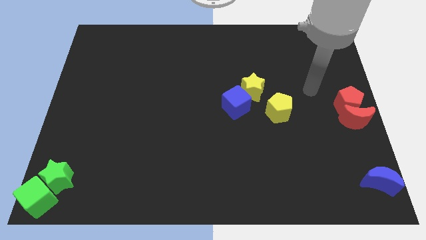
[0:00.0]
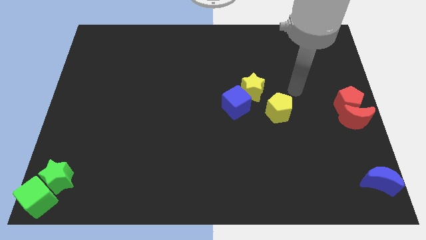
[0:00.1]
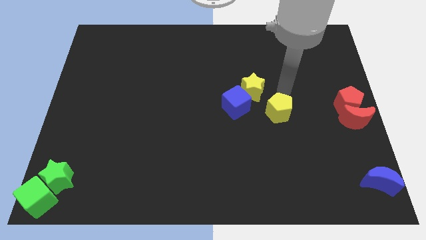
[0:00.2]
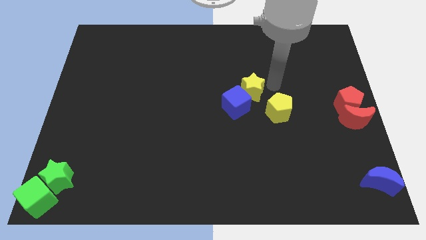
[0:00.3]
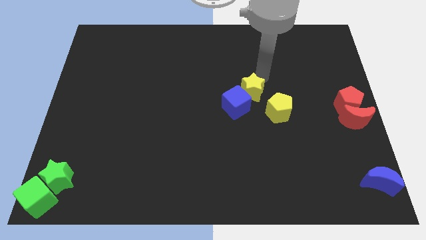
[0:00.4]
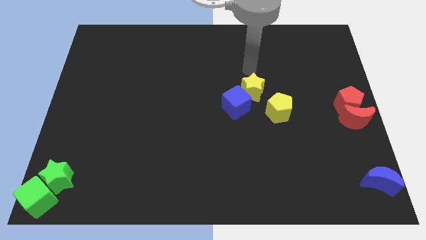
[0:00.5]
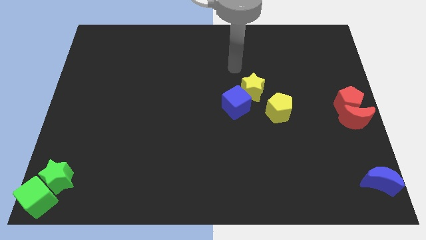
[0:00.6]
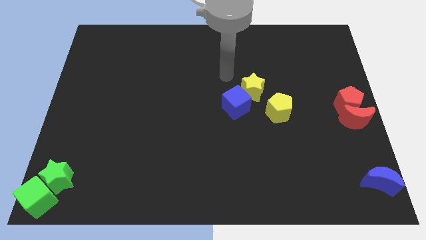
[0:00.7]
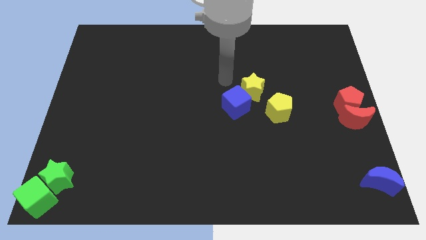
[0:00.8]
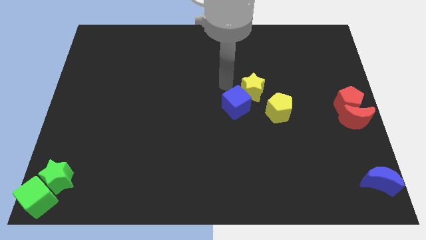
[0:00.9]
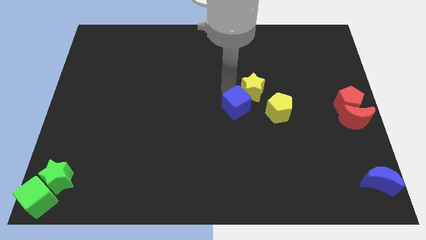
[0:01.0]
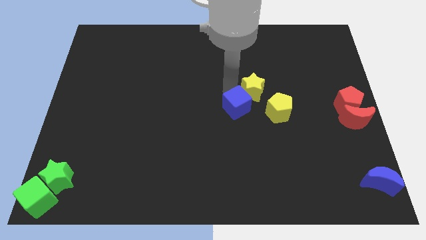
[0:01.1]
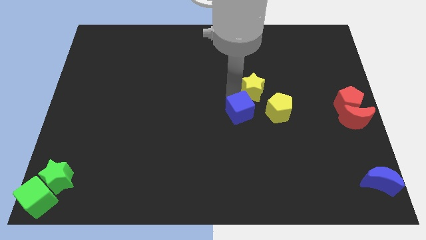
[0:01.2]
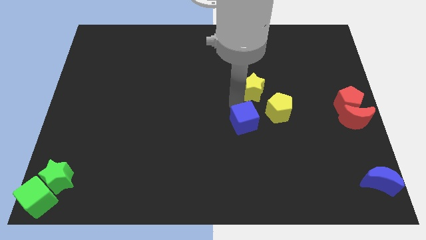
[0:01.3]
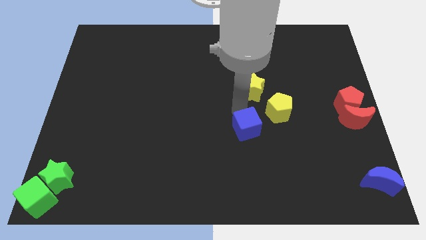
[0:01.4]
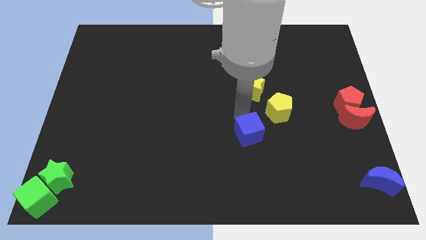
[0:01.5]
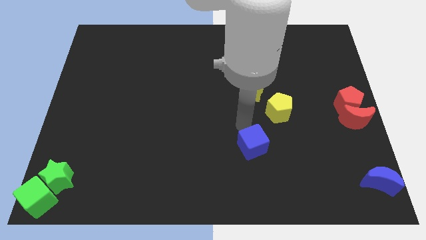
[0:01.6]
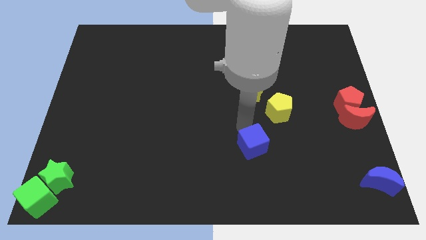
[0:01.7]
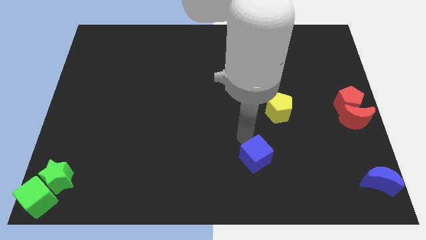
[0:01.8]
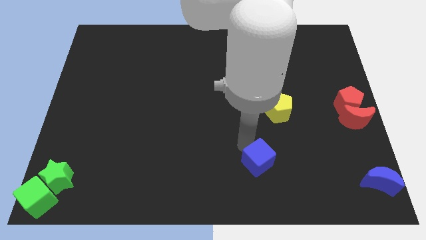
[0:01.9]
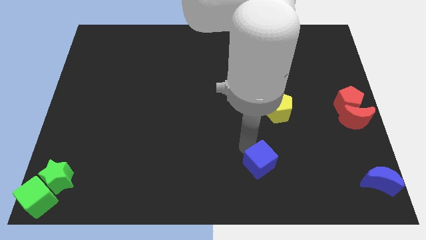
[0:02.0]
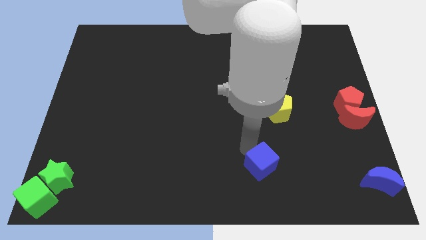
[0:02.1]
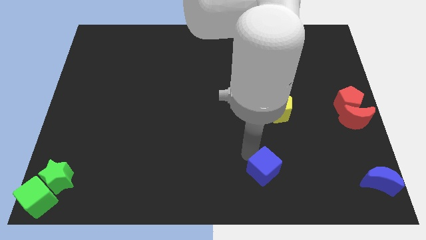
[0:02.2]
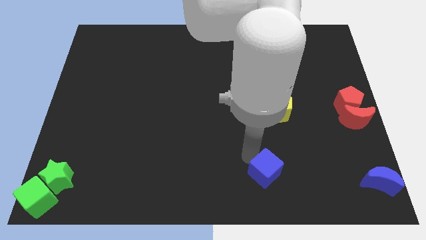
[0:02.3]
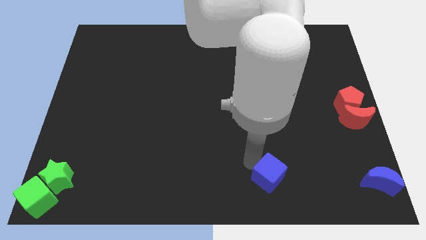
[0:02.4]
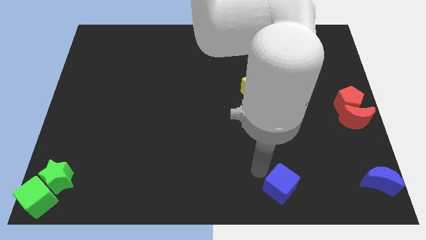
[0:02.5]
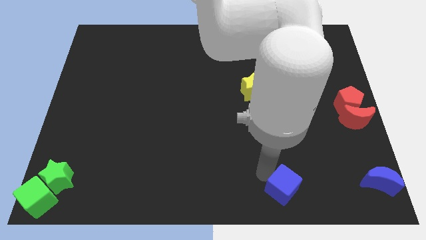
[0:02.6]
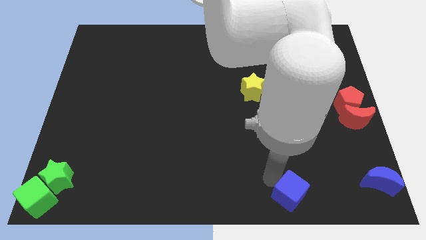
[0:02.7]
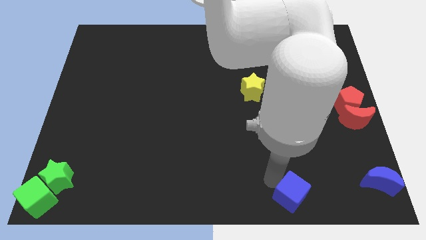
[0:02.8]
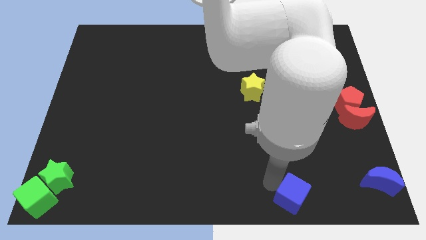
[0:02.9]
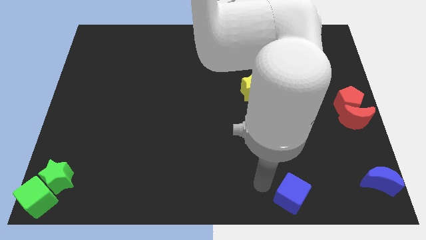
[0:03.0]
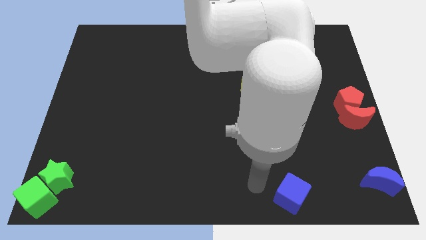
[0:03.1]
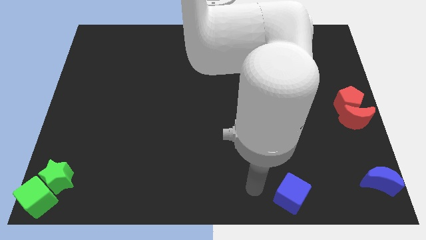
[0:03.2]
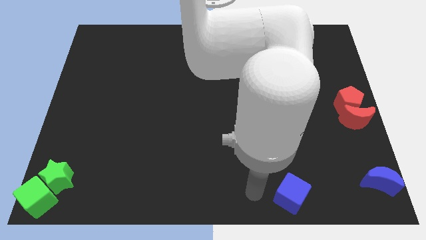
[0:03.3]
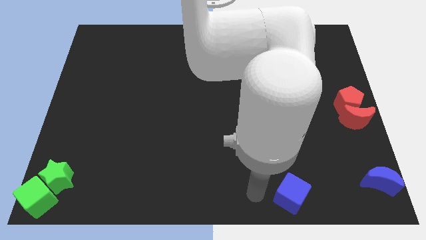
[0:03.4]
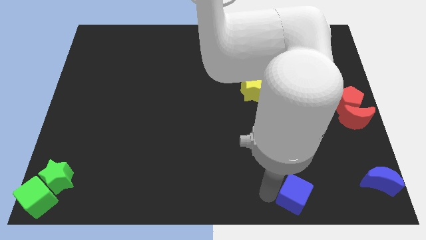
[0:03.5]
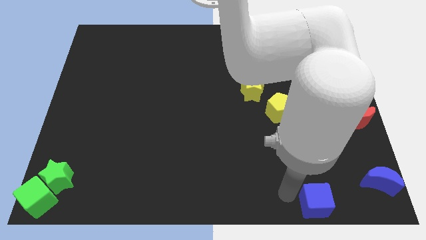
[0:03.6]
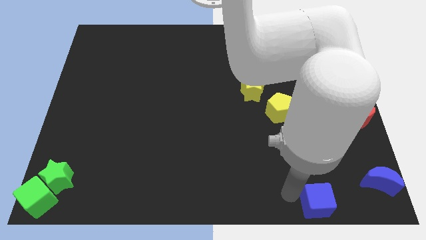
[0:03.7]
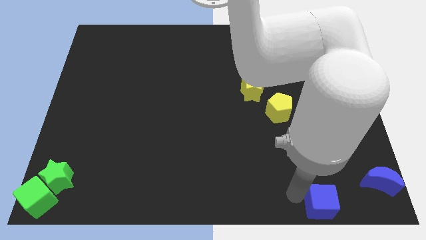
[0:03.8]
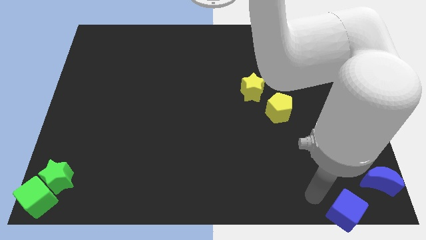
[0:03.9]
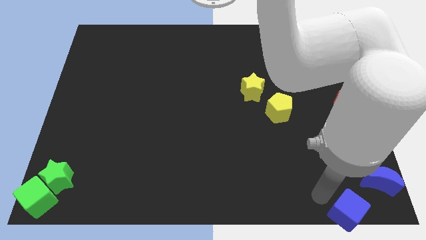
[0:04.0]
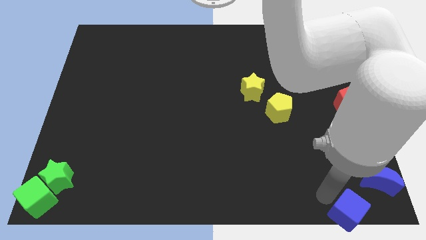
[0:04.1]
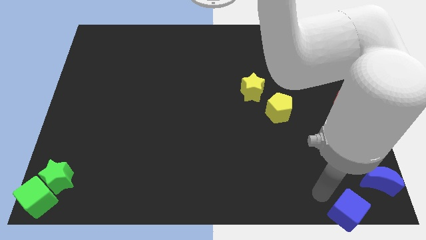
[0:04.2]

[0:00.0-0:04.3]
push the blue cube towards bottom right corner of the board

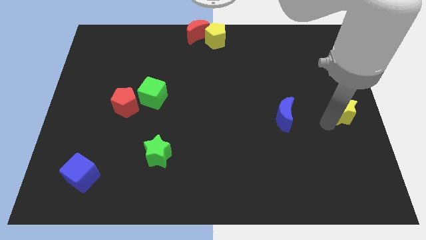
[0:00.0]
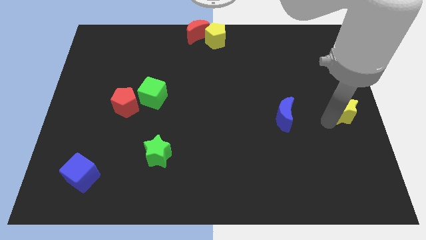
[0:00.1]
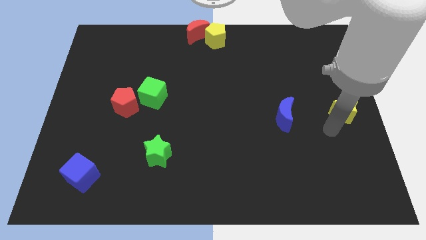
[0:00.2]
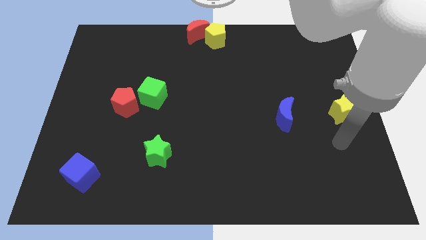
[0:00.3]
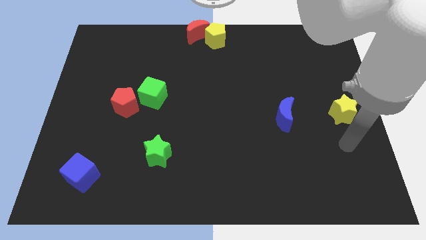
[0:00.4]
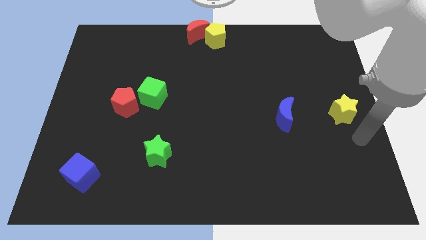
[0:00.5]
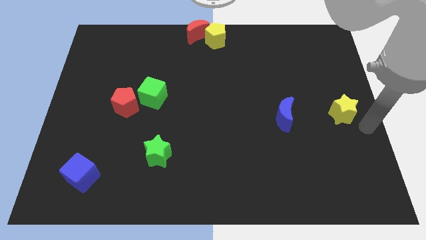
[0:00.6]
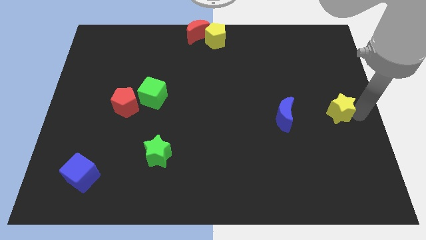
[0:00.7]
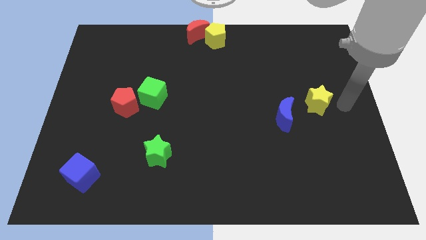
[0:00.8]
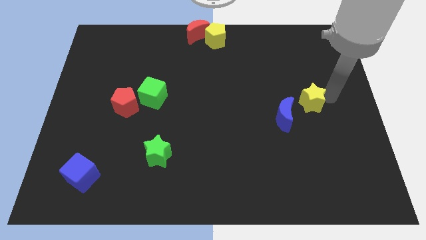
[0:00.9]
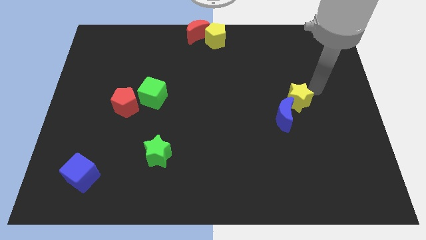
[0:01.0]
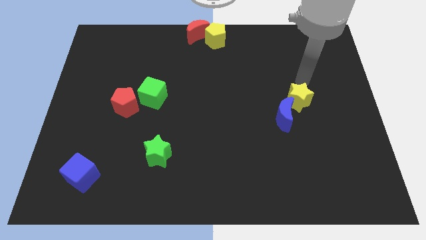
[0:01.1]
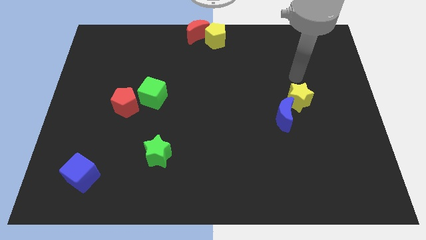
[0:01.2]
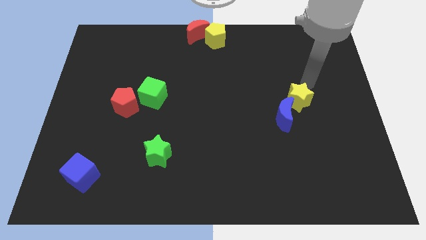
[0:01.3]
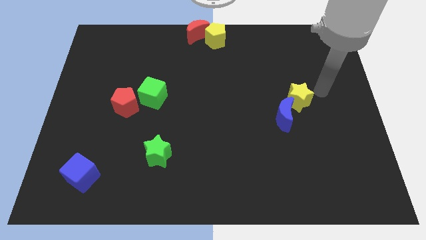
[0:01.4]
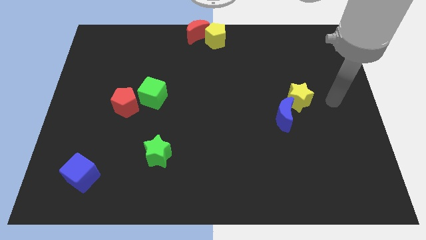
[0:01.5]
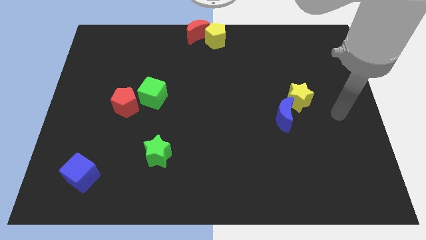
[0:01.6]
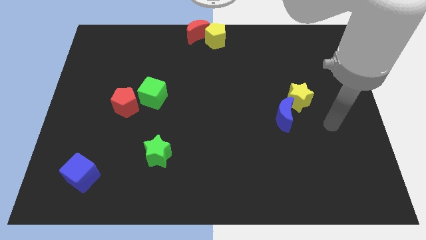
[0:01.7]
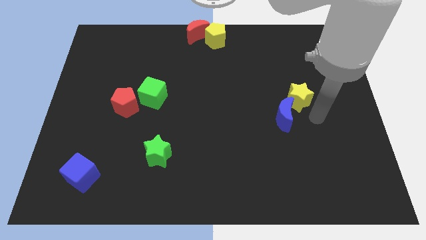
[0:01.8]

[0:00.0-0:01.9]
place yellow star close to blue crescent

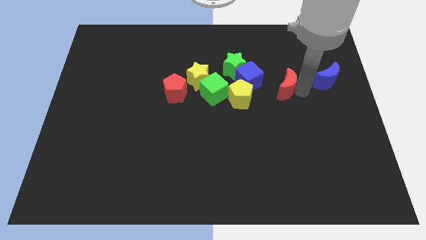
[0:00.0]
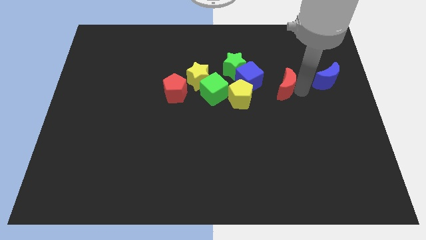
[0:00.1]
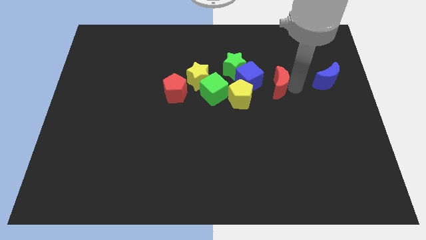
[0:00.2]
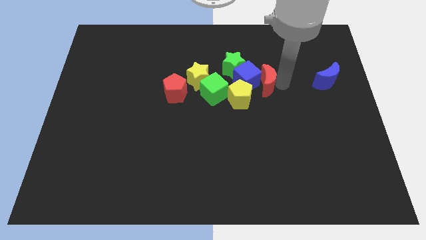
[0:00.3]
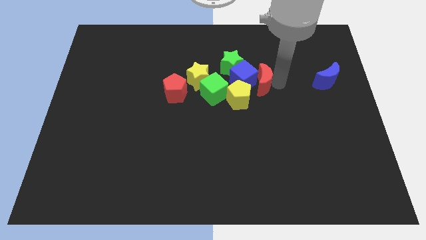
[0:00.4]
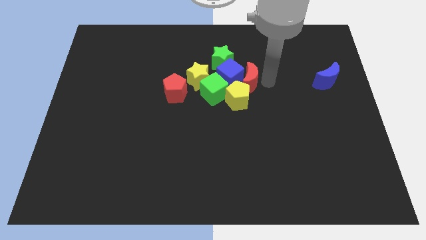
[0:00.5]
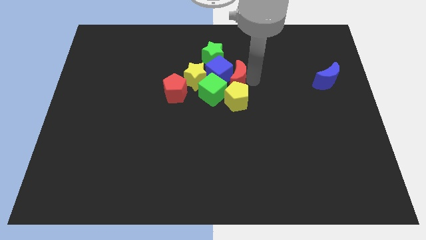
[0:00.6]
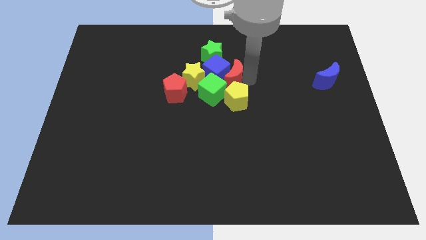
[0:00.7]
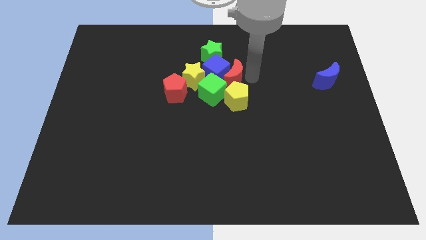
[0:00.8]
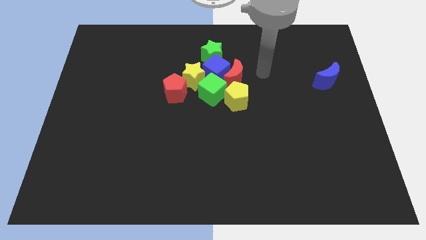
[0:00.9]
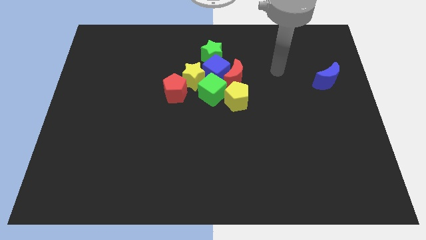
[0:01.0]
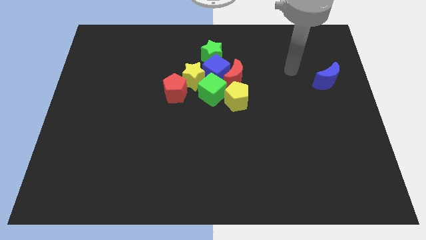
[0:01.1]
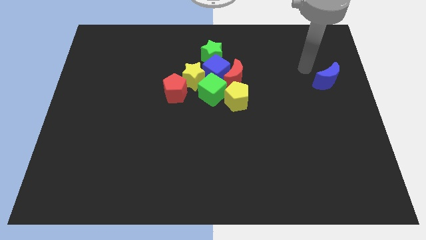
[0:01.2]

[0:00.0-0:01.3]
push the red crescent to the right of the blue cube

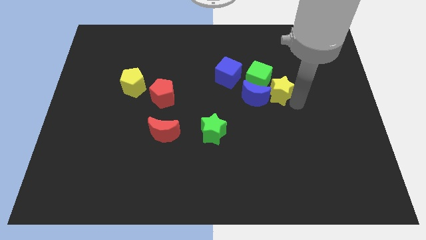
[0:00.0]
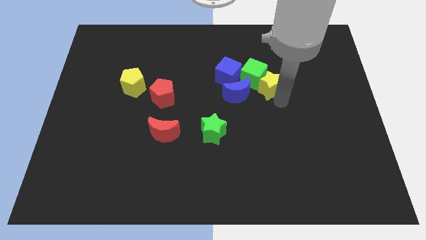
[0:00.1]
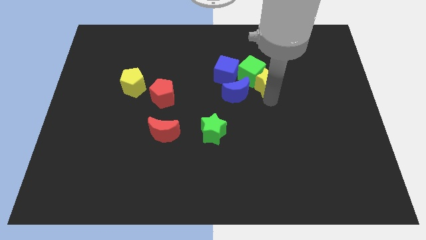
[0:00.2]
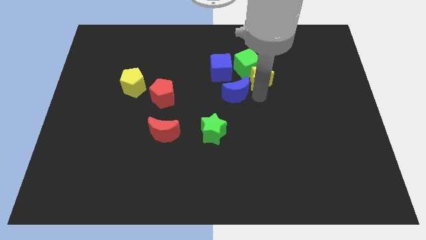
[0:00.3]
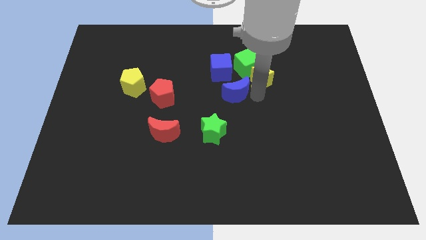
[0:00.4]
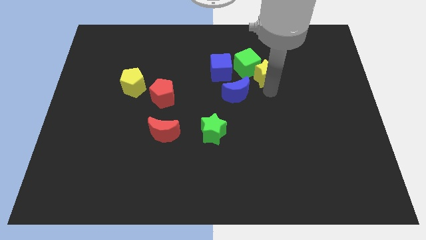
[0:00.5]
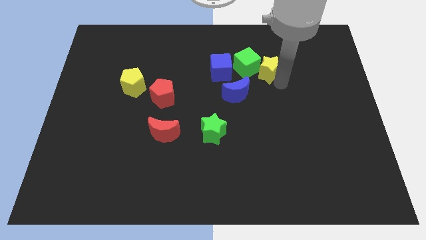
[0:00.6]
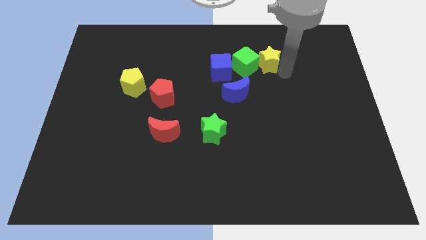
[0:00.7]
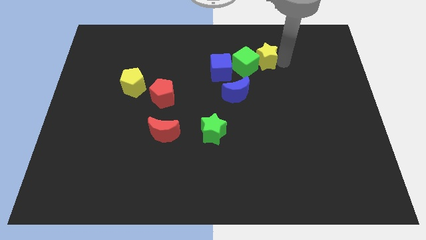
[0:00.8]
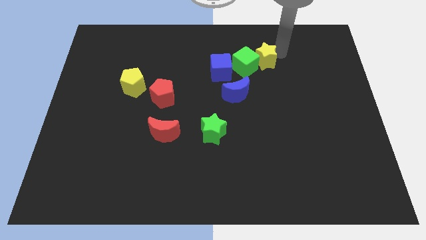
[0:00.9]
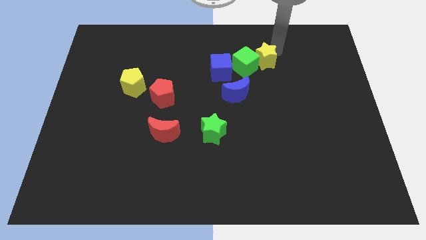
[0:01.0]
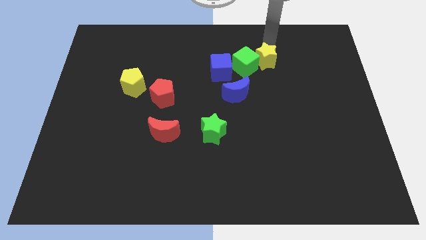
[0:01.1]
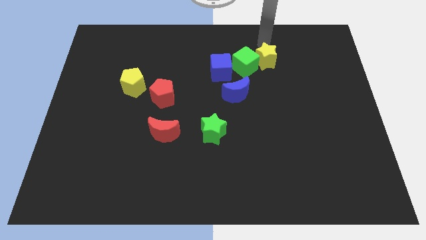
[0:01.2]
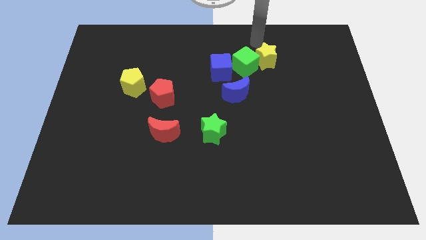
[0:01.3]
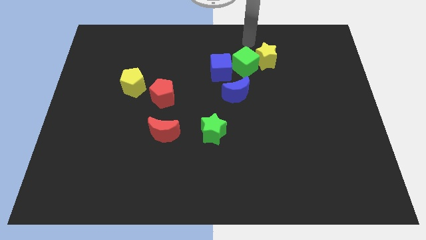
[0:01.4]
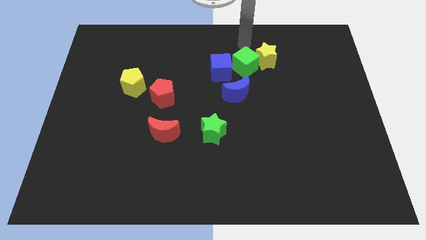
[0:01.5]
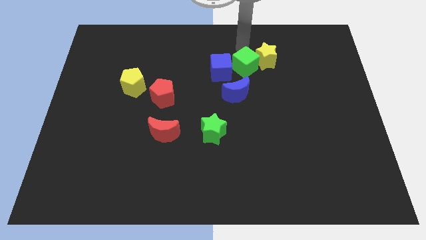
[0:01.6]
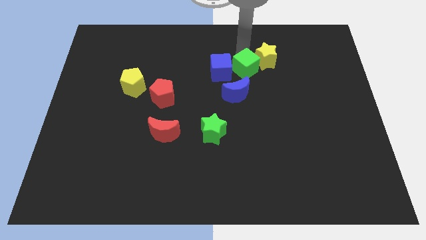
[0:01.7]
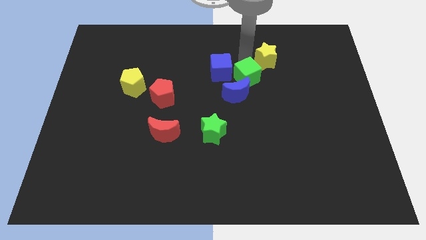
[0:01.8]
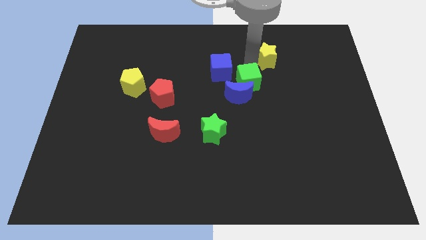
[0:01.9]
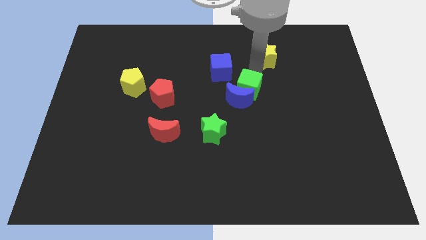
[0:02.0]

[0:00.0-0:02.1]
slide the green cube towards the top side of the blue crescent
